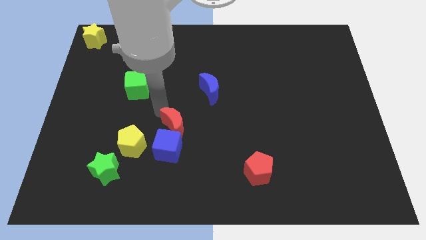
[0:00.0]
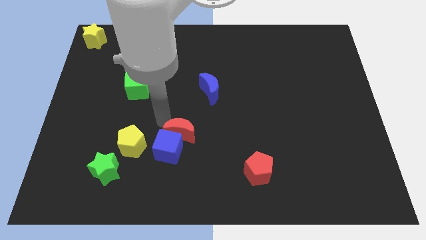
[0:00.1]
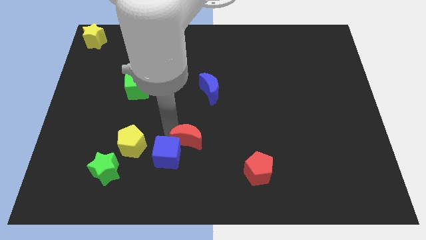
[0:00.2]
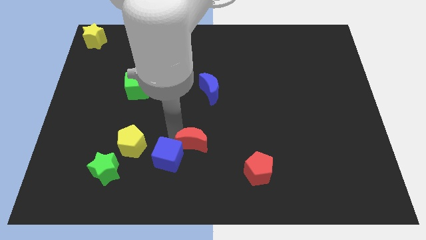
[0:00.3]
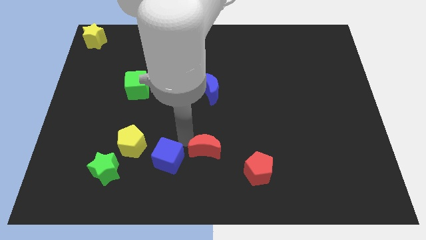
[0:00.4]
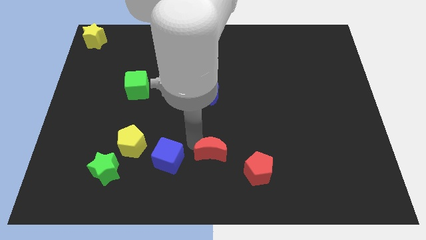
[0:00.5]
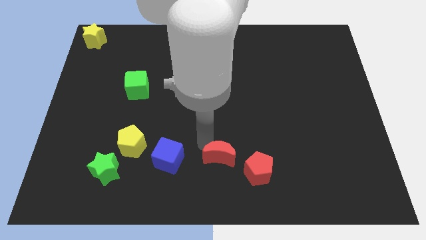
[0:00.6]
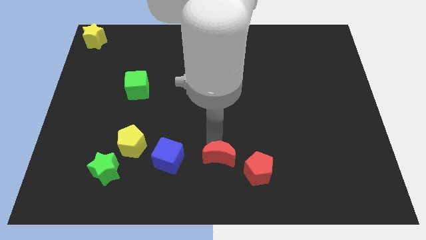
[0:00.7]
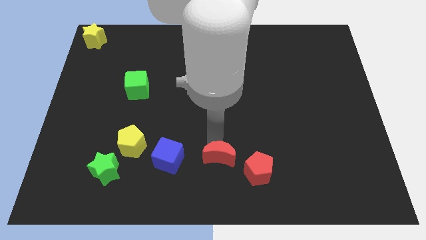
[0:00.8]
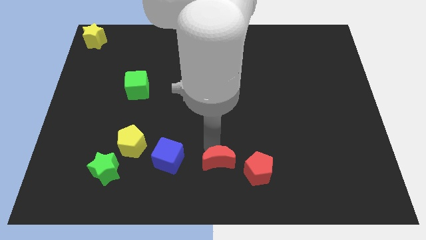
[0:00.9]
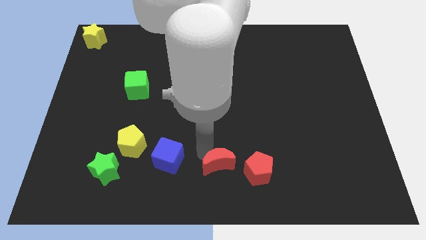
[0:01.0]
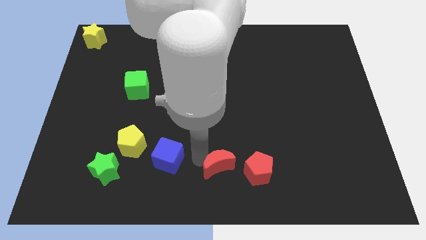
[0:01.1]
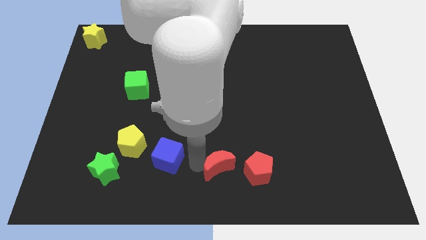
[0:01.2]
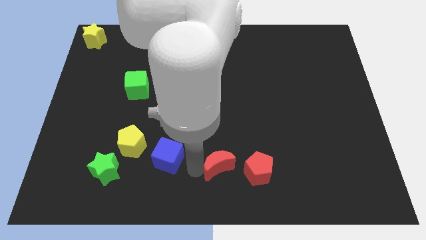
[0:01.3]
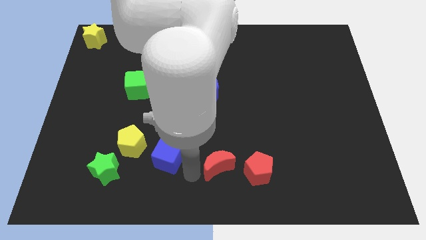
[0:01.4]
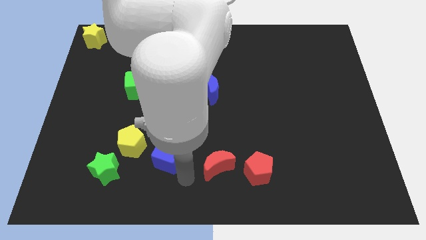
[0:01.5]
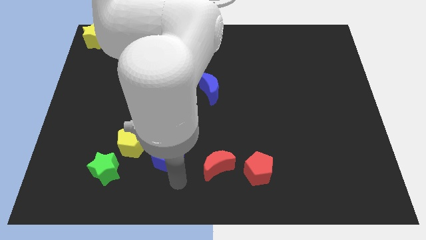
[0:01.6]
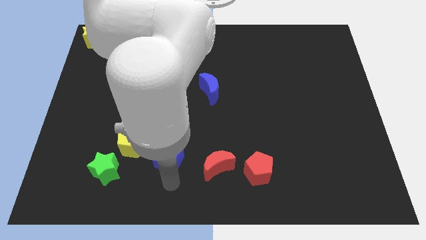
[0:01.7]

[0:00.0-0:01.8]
push the red moon to the bottom left side of the red pentagon

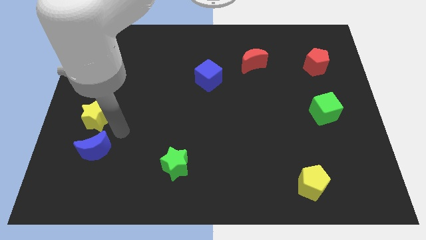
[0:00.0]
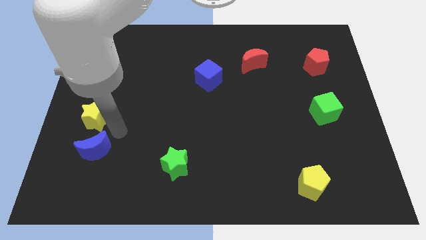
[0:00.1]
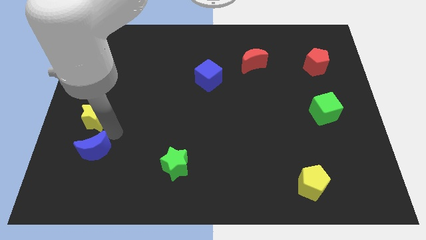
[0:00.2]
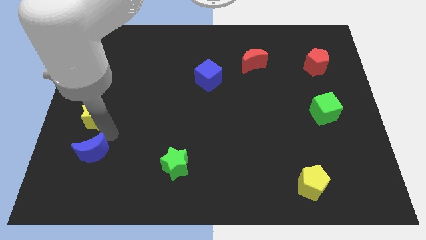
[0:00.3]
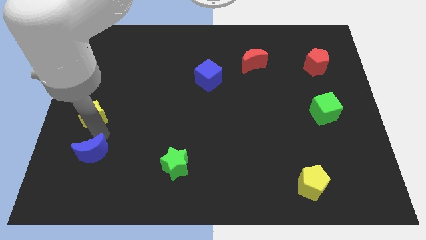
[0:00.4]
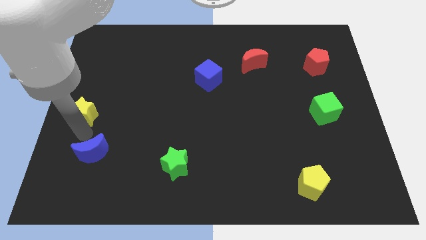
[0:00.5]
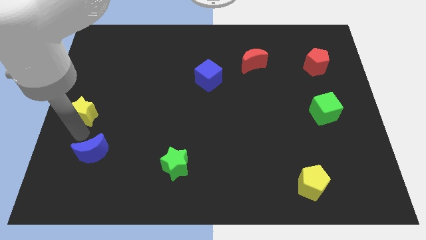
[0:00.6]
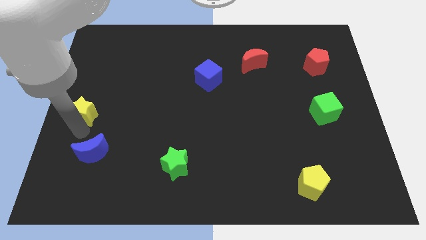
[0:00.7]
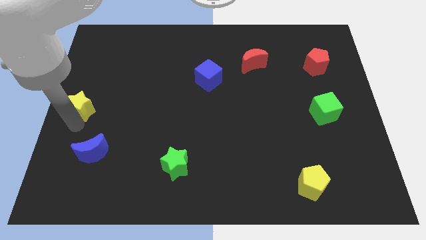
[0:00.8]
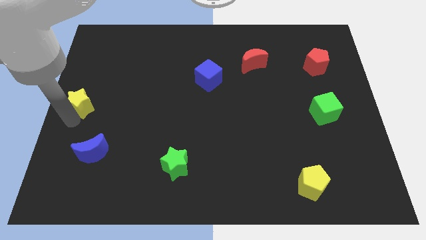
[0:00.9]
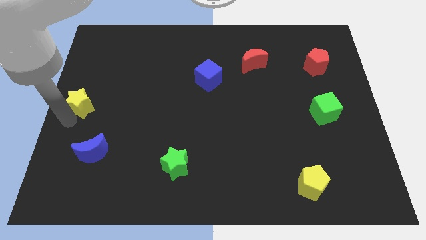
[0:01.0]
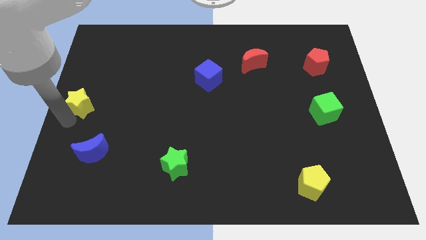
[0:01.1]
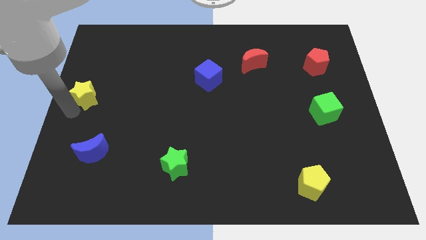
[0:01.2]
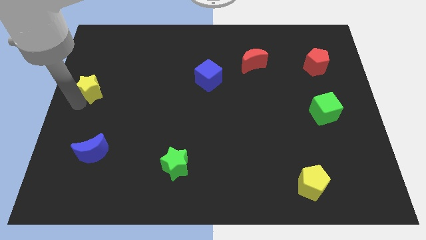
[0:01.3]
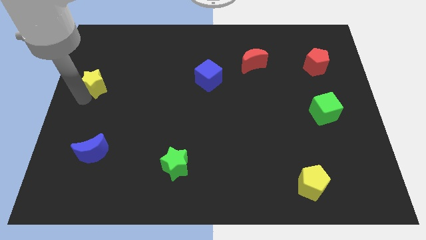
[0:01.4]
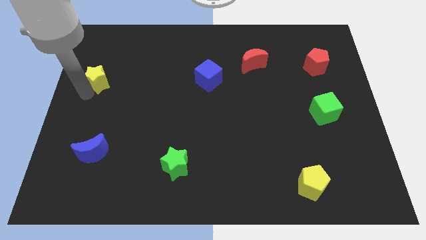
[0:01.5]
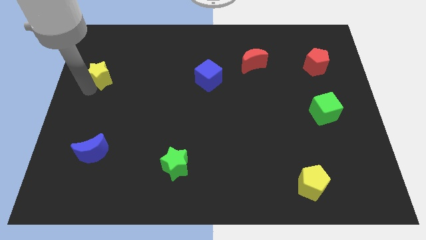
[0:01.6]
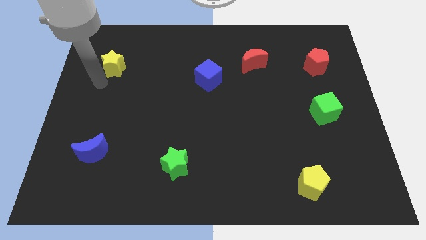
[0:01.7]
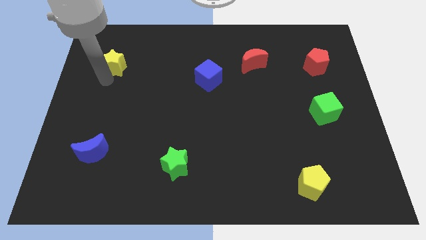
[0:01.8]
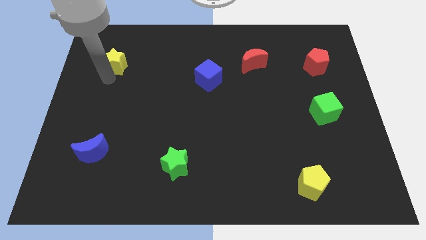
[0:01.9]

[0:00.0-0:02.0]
push the yellow star slightly upwards

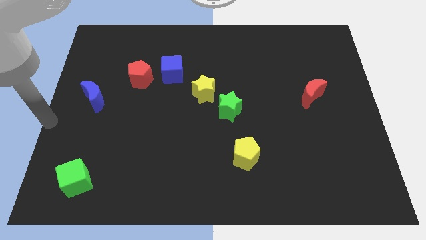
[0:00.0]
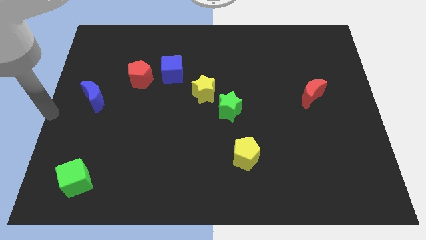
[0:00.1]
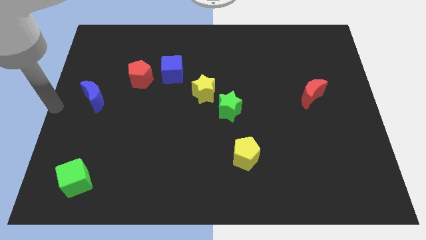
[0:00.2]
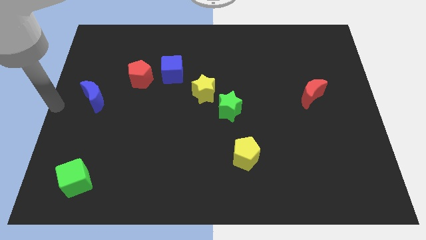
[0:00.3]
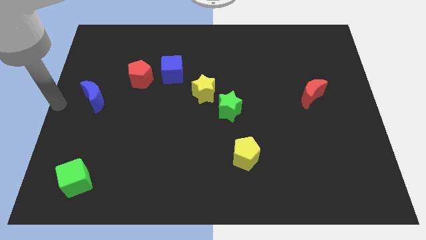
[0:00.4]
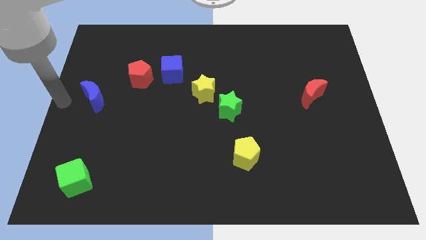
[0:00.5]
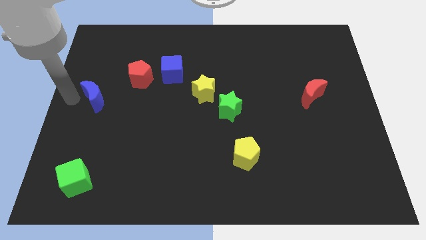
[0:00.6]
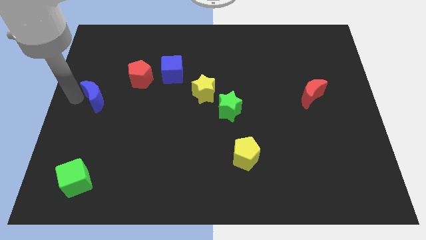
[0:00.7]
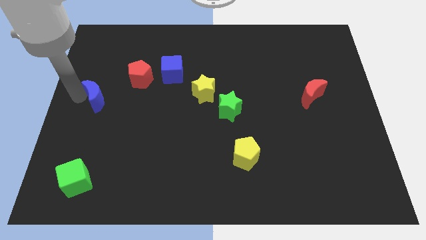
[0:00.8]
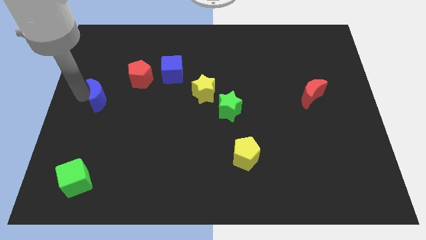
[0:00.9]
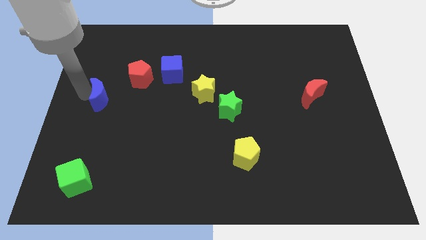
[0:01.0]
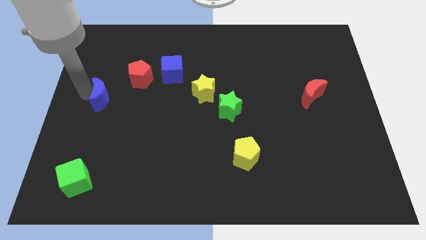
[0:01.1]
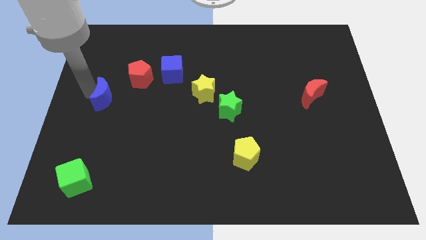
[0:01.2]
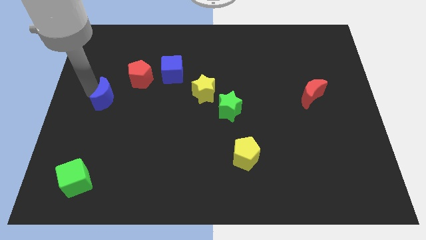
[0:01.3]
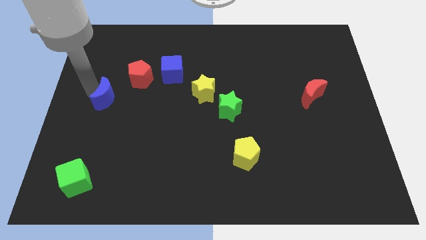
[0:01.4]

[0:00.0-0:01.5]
slightly move the blue crescent to the right of the board

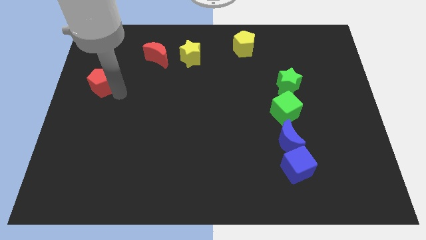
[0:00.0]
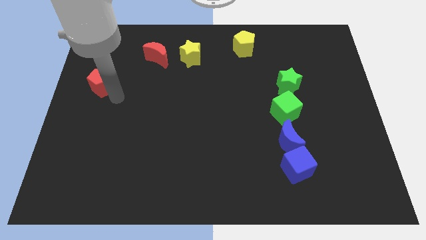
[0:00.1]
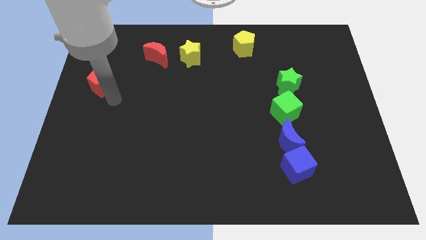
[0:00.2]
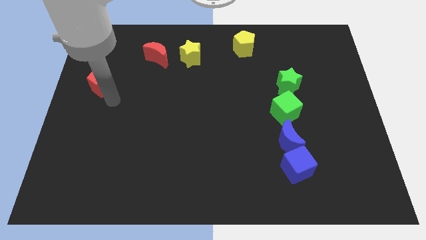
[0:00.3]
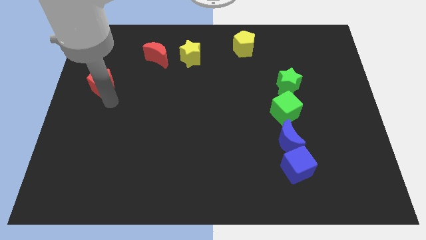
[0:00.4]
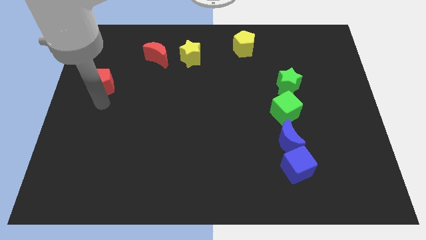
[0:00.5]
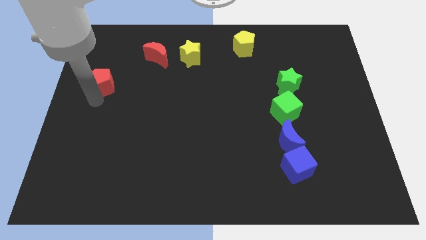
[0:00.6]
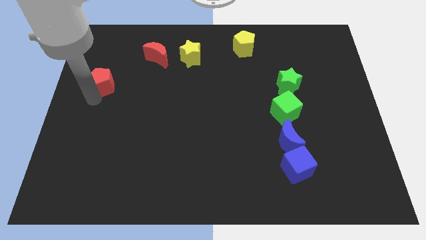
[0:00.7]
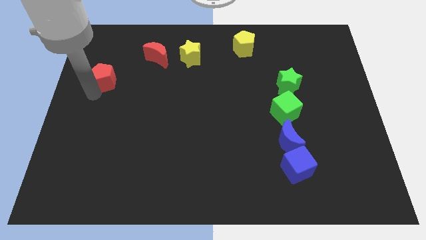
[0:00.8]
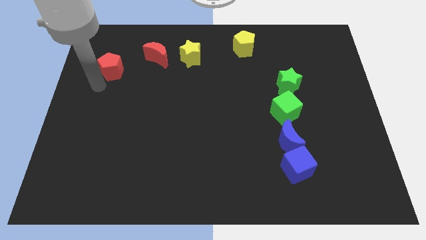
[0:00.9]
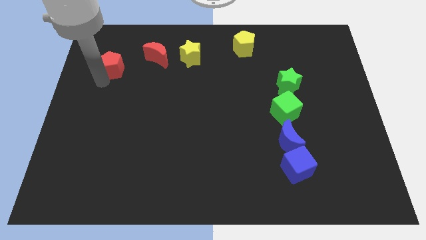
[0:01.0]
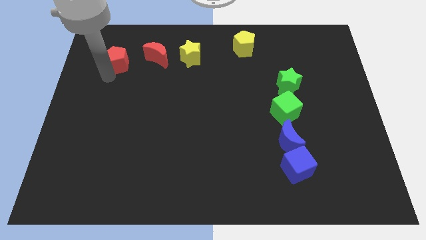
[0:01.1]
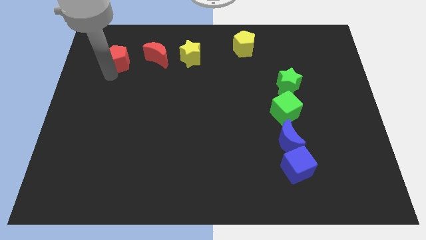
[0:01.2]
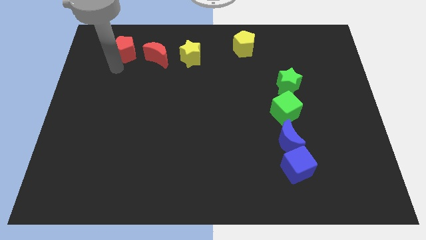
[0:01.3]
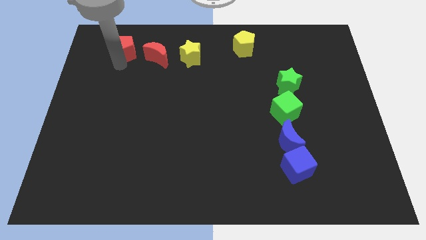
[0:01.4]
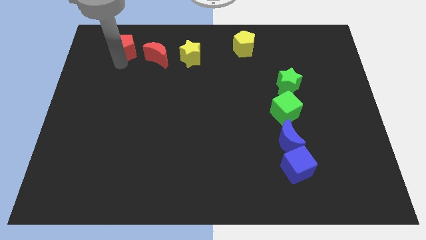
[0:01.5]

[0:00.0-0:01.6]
place the red pentagon to the left of the red crescent

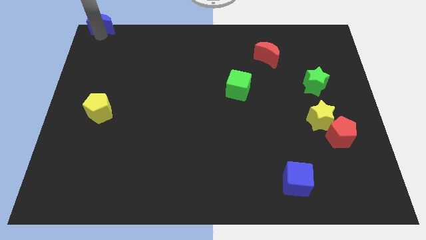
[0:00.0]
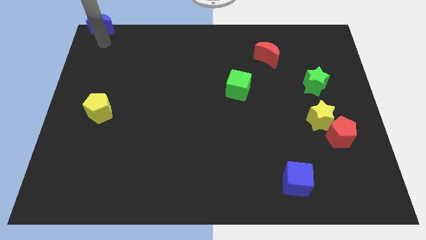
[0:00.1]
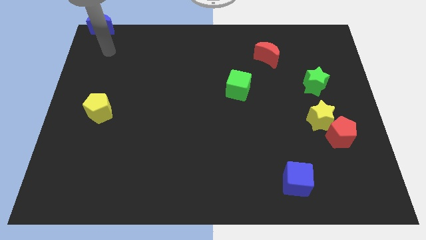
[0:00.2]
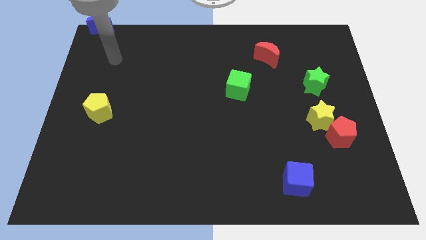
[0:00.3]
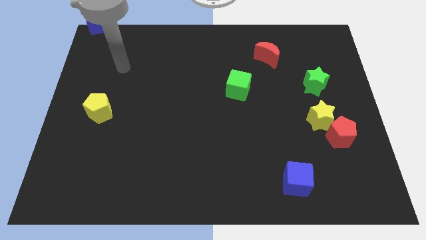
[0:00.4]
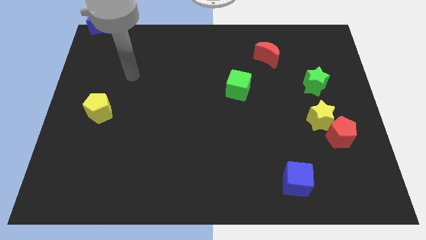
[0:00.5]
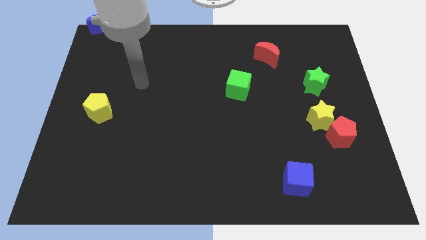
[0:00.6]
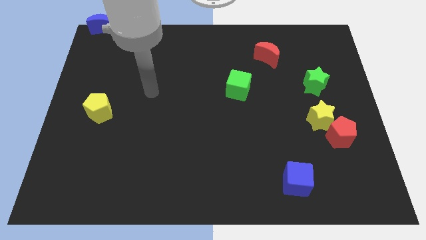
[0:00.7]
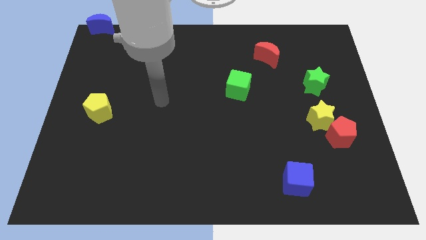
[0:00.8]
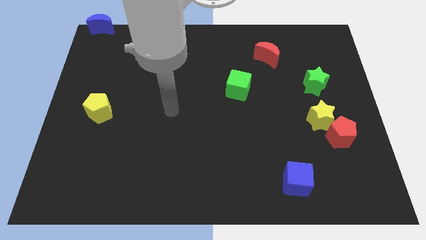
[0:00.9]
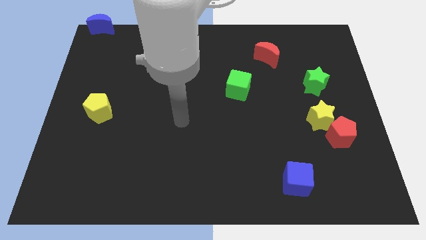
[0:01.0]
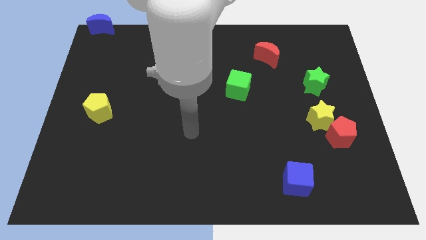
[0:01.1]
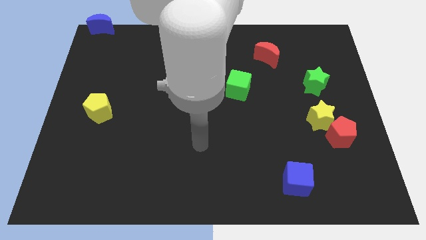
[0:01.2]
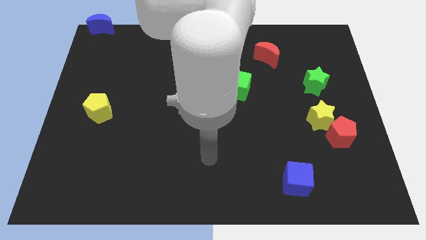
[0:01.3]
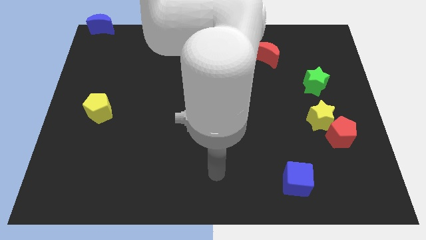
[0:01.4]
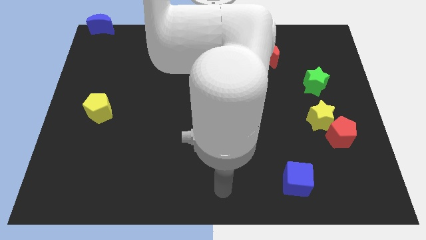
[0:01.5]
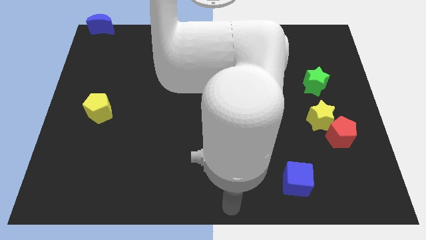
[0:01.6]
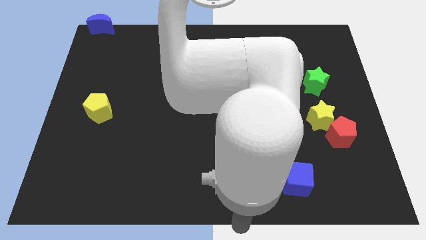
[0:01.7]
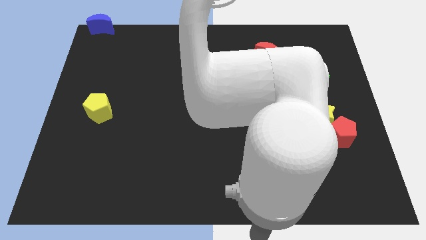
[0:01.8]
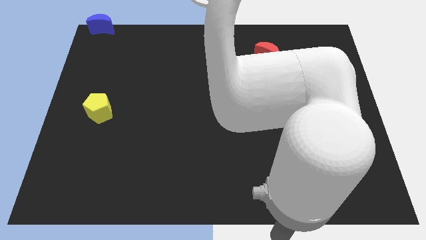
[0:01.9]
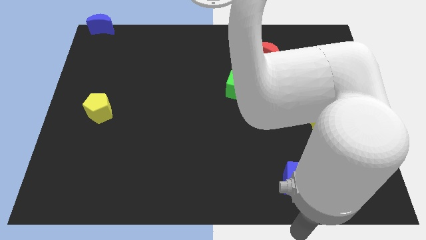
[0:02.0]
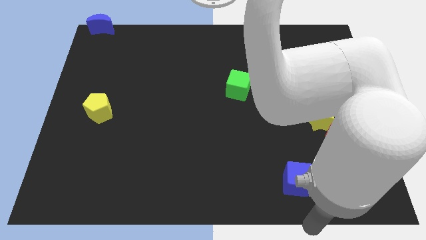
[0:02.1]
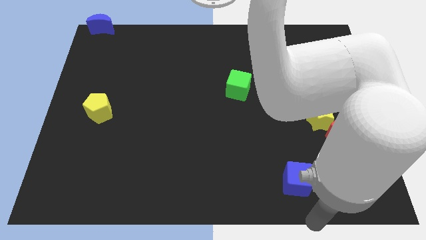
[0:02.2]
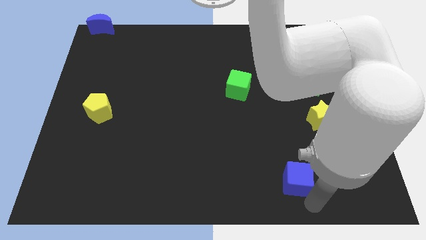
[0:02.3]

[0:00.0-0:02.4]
point your arm at the bottom of blue cube
